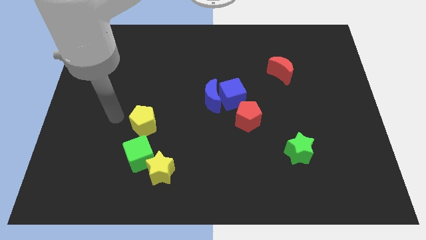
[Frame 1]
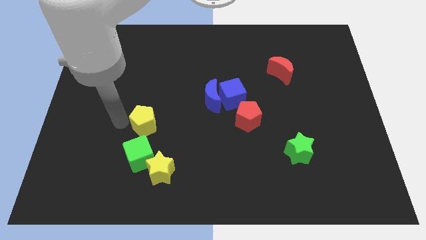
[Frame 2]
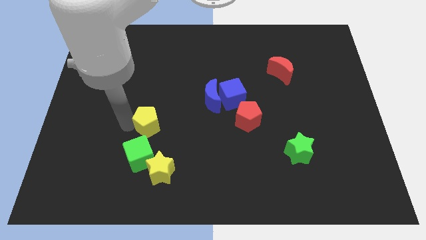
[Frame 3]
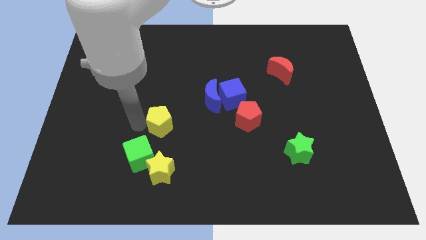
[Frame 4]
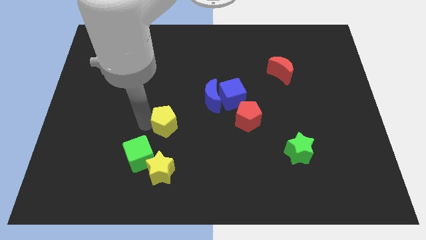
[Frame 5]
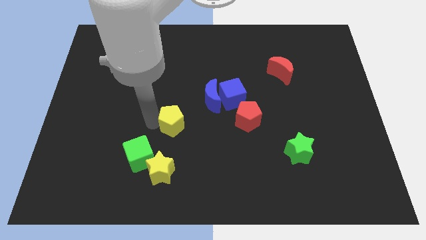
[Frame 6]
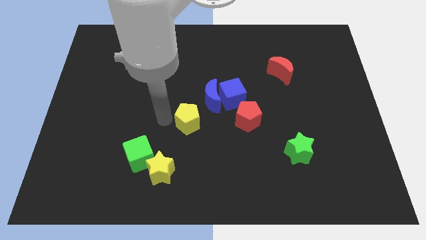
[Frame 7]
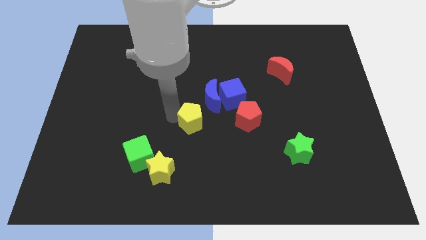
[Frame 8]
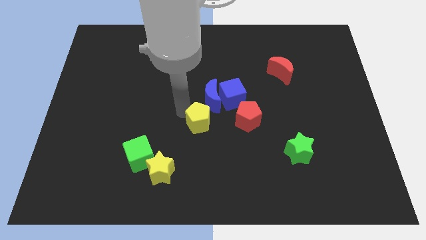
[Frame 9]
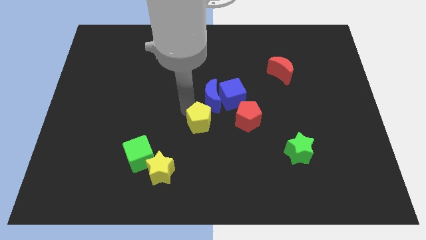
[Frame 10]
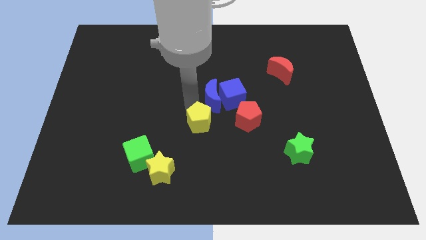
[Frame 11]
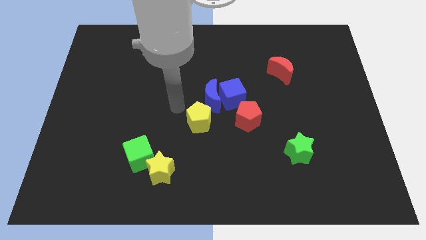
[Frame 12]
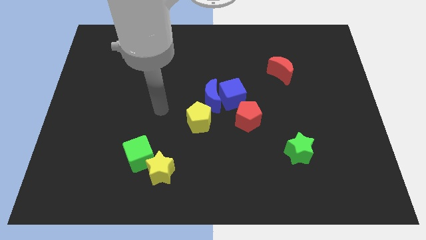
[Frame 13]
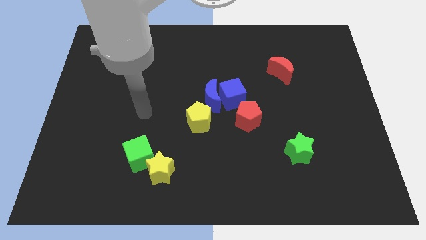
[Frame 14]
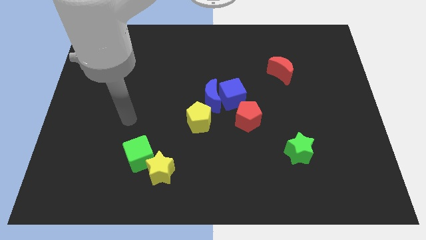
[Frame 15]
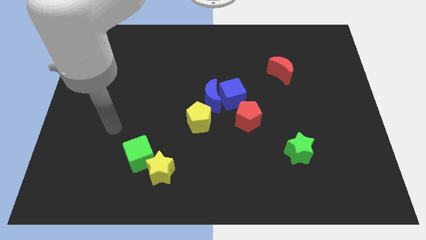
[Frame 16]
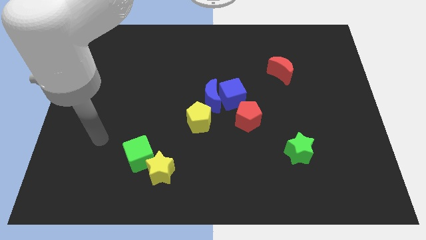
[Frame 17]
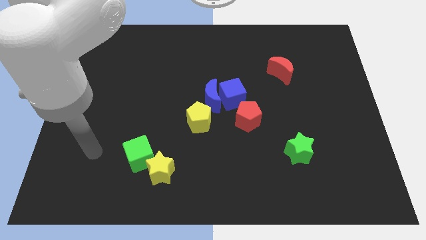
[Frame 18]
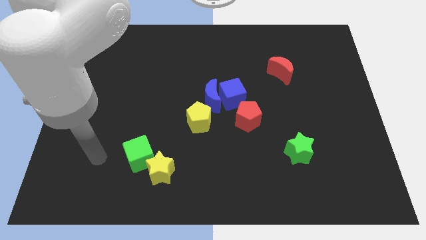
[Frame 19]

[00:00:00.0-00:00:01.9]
move the yellow pentagon to the left side of the red pentagon

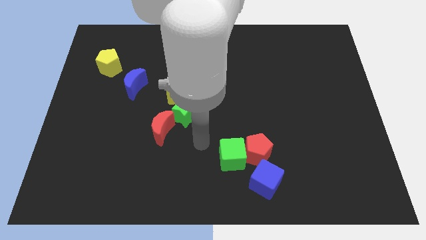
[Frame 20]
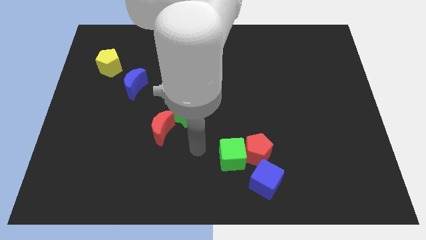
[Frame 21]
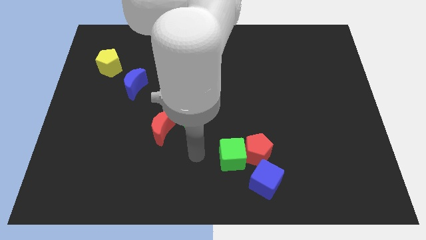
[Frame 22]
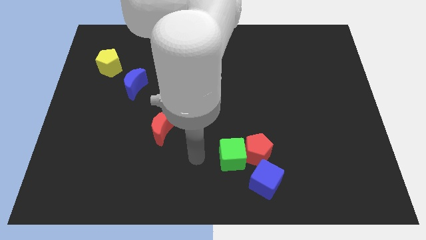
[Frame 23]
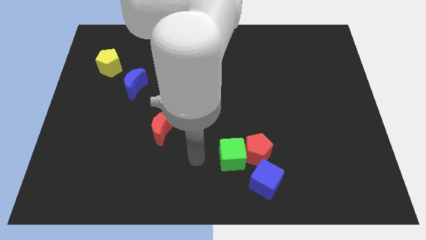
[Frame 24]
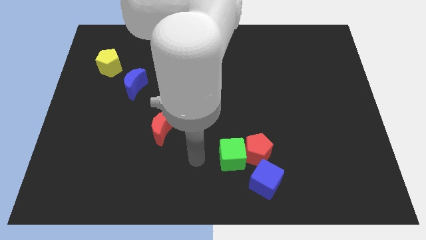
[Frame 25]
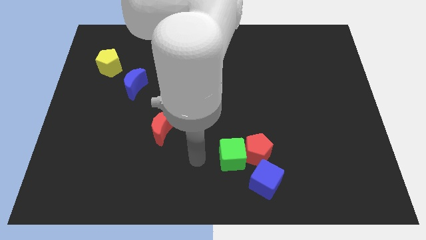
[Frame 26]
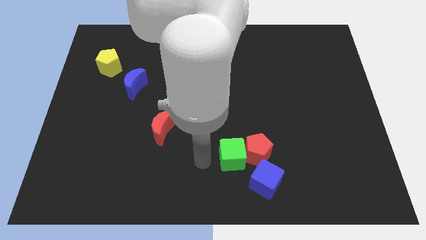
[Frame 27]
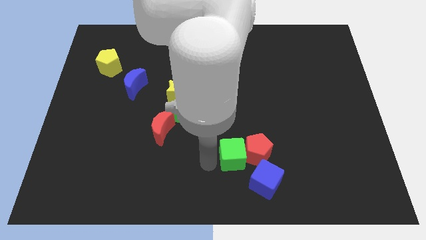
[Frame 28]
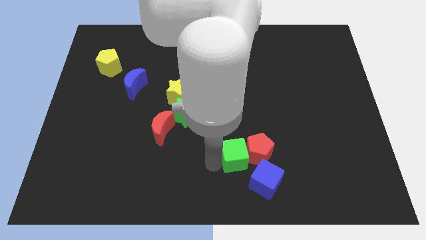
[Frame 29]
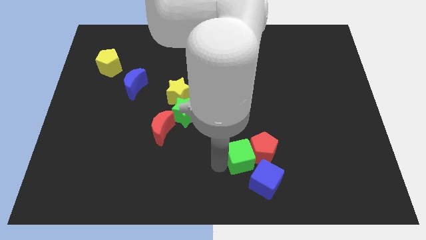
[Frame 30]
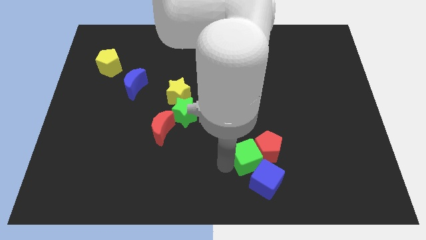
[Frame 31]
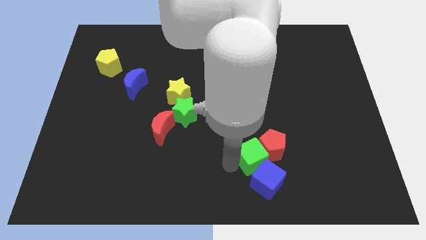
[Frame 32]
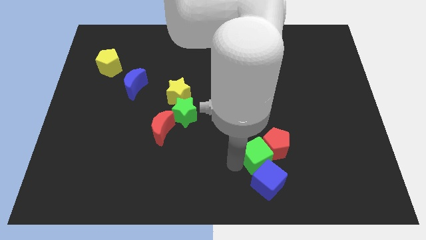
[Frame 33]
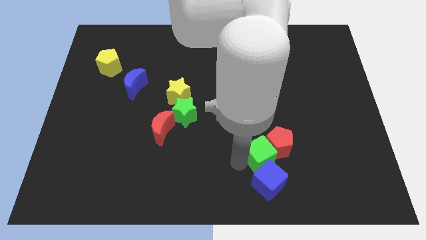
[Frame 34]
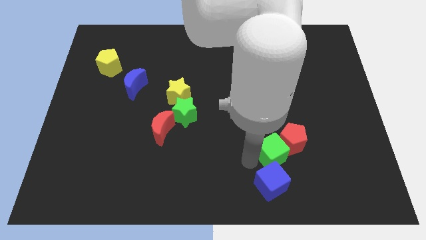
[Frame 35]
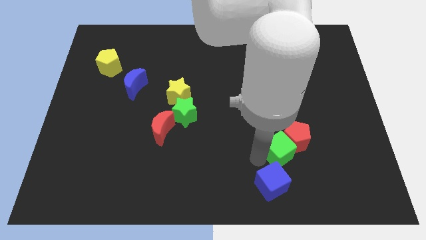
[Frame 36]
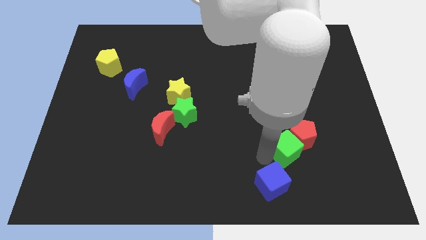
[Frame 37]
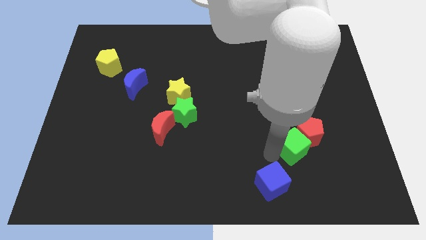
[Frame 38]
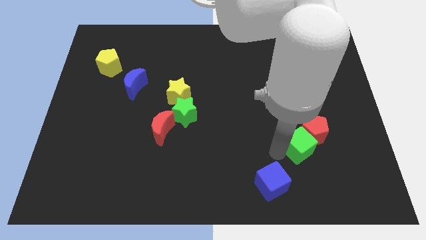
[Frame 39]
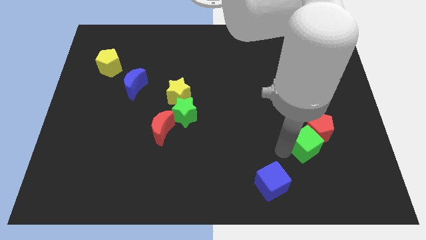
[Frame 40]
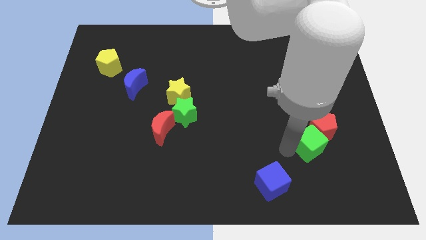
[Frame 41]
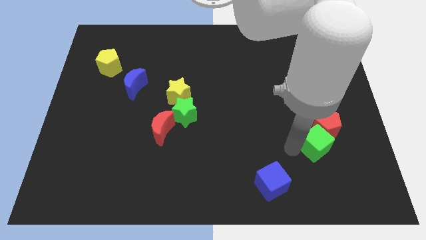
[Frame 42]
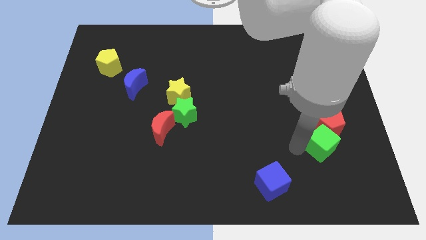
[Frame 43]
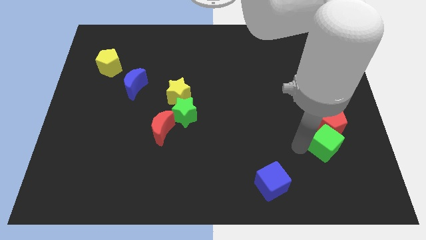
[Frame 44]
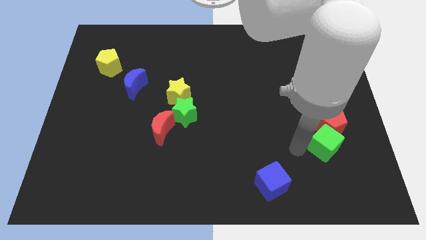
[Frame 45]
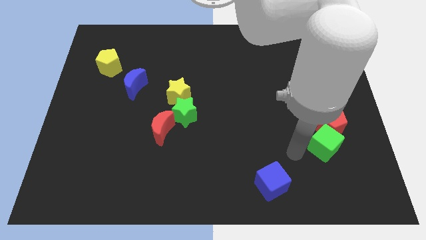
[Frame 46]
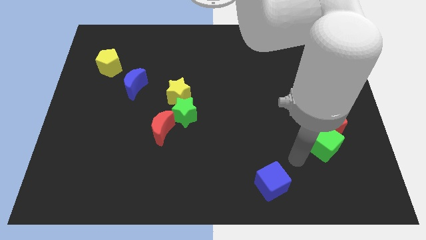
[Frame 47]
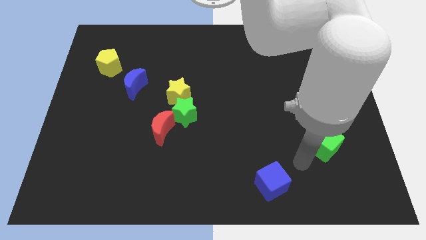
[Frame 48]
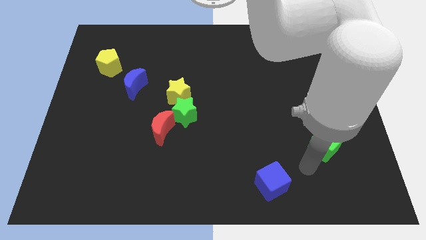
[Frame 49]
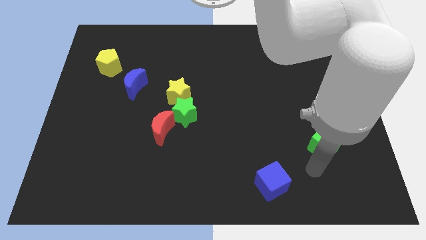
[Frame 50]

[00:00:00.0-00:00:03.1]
push green cube in to red pentagon

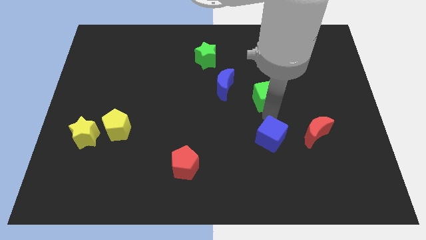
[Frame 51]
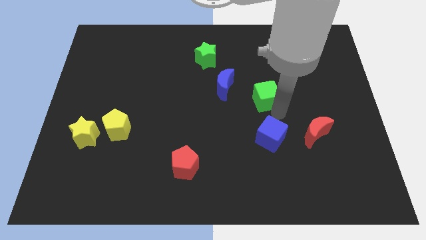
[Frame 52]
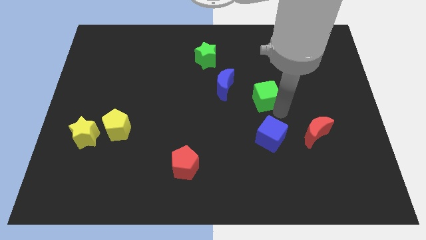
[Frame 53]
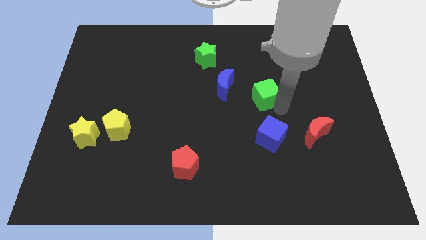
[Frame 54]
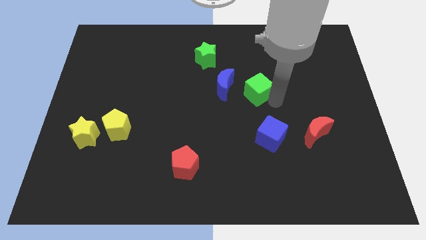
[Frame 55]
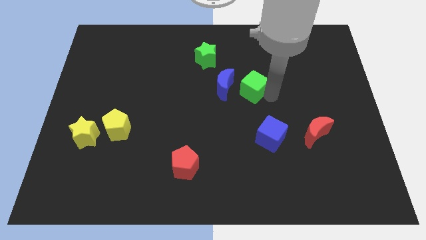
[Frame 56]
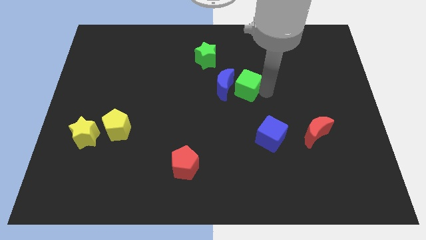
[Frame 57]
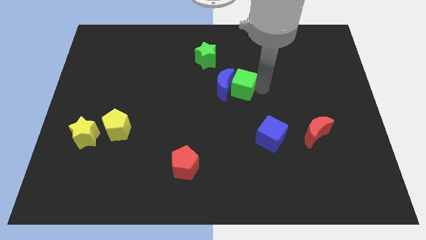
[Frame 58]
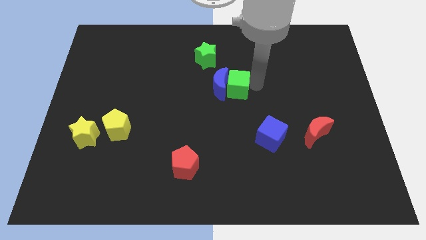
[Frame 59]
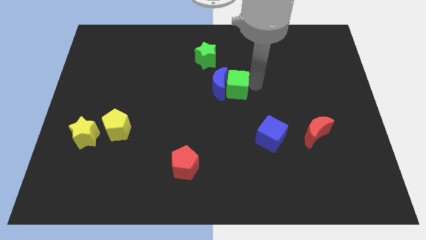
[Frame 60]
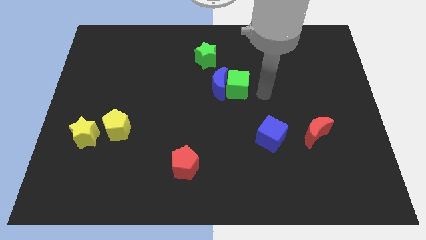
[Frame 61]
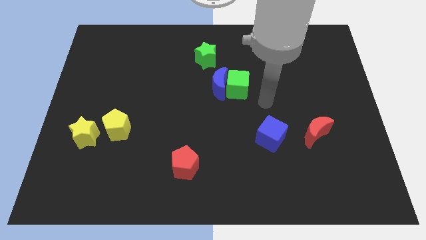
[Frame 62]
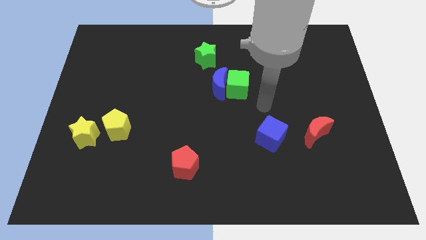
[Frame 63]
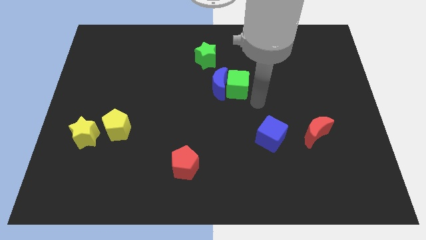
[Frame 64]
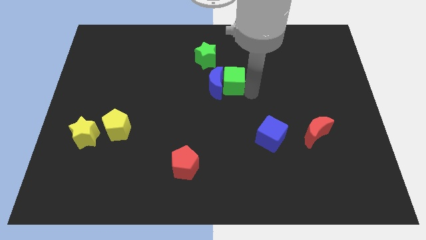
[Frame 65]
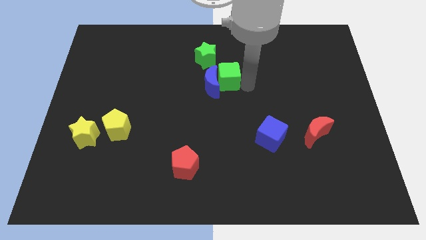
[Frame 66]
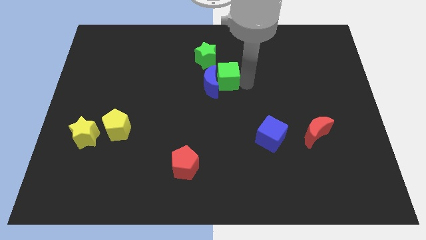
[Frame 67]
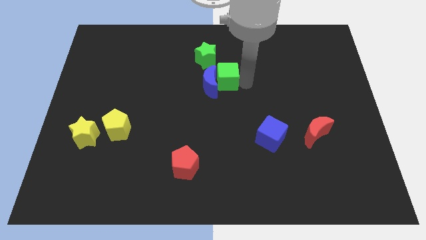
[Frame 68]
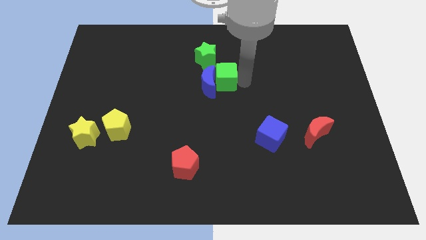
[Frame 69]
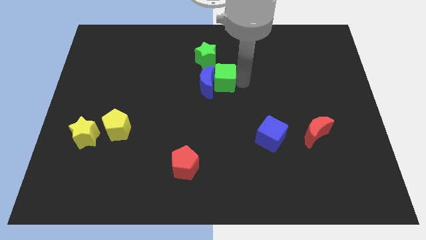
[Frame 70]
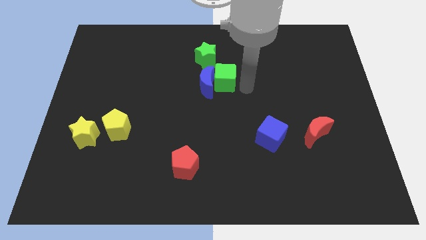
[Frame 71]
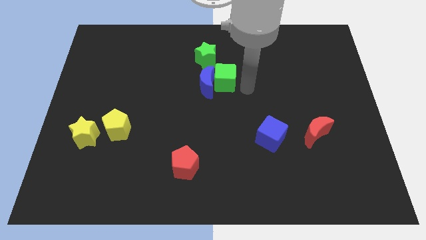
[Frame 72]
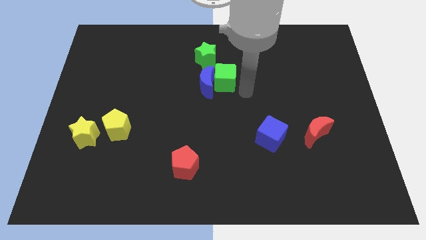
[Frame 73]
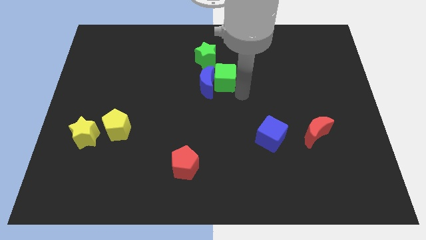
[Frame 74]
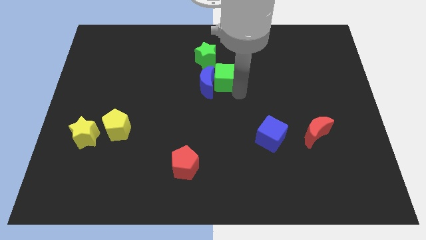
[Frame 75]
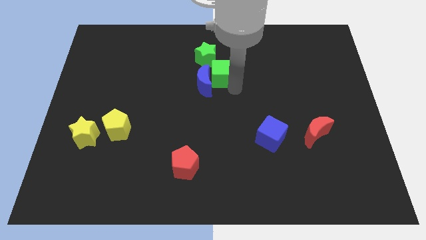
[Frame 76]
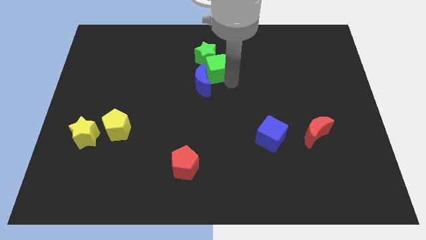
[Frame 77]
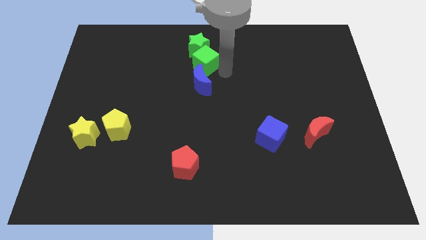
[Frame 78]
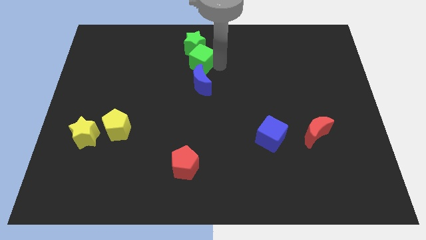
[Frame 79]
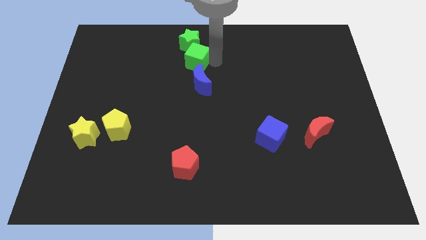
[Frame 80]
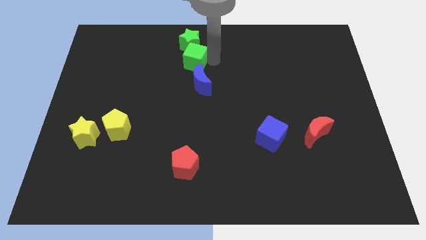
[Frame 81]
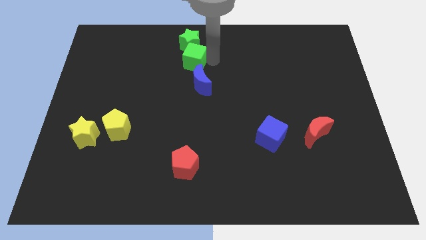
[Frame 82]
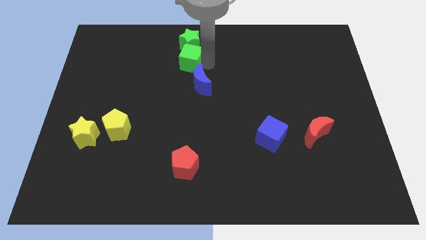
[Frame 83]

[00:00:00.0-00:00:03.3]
put the green cube in between the green star and blue moon

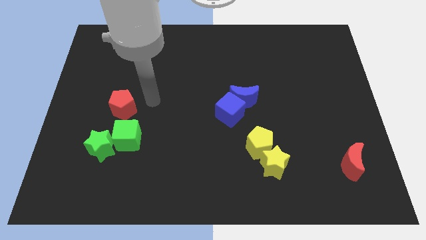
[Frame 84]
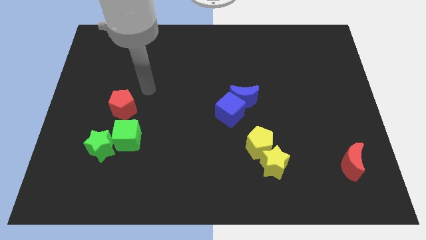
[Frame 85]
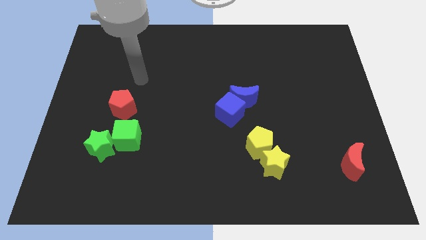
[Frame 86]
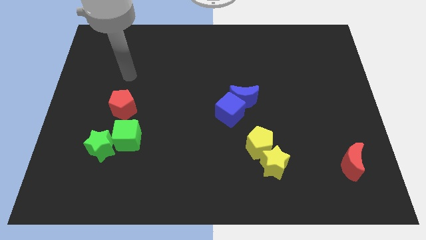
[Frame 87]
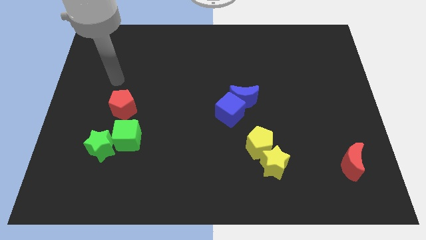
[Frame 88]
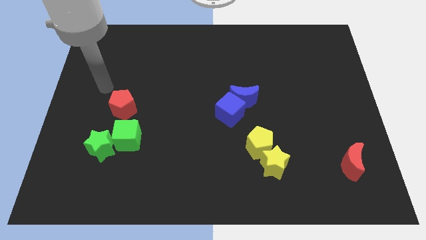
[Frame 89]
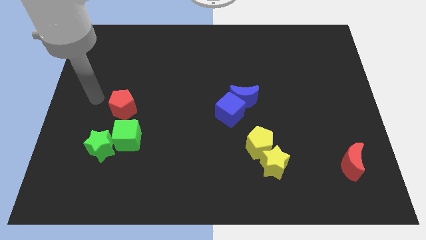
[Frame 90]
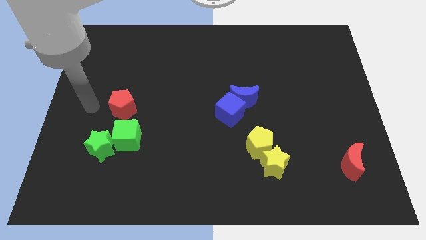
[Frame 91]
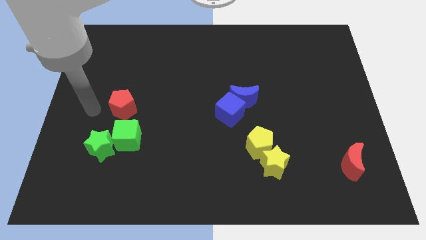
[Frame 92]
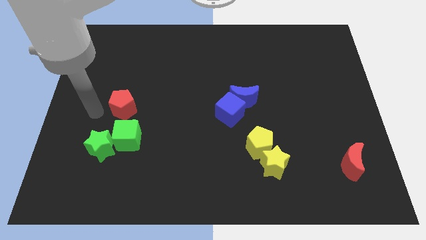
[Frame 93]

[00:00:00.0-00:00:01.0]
move your arm to the left center of the red pentagon
